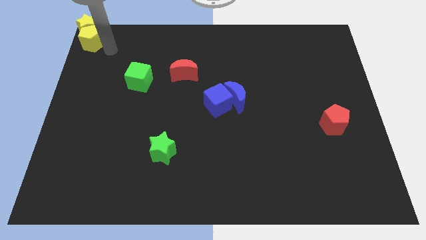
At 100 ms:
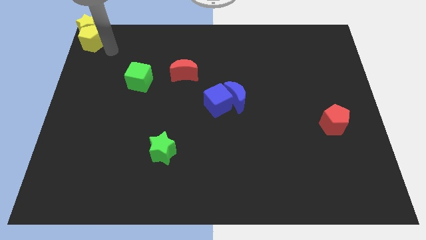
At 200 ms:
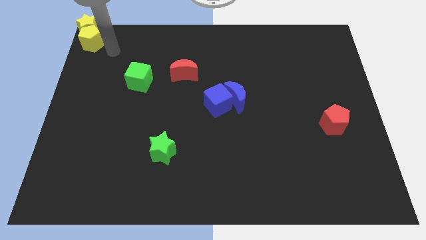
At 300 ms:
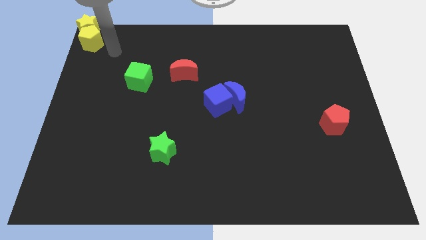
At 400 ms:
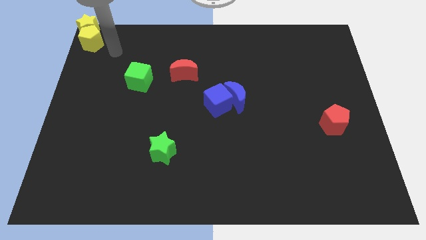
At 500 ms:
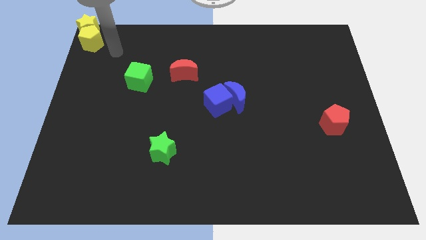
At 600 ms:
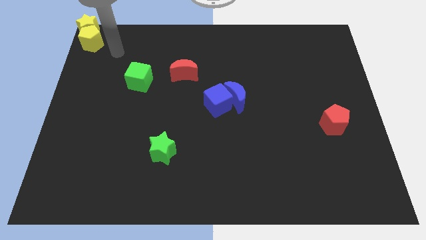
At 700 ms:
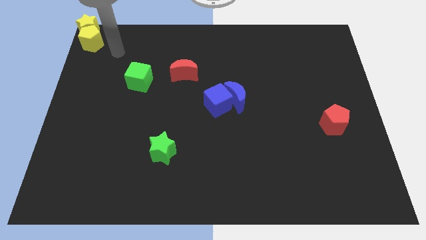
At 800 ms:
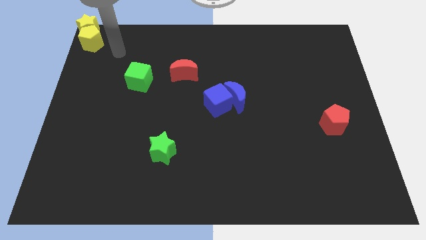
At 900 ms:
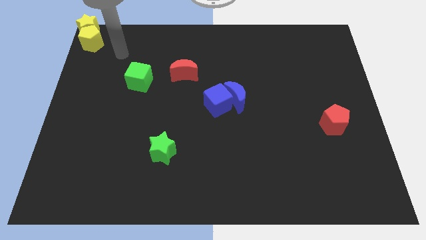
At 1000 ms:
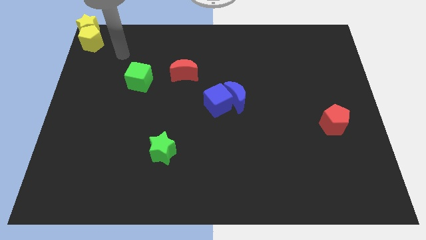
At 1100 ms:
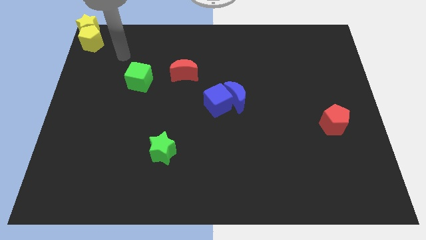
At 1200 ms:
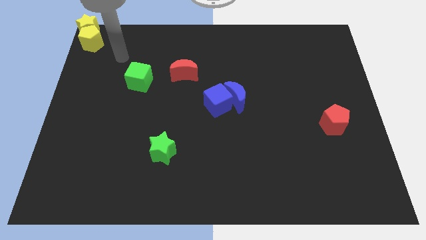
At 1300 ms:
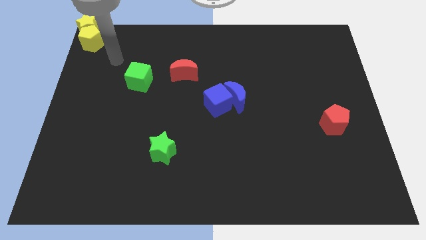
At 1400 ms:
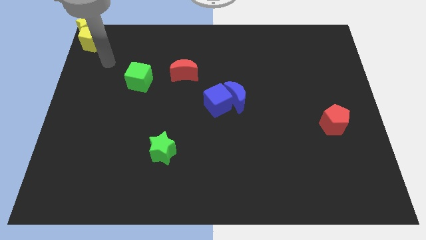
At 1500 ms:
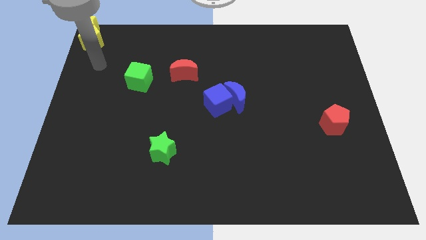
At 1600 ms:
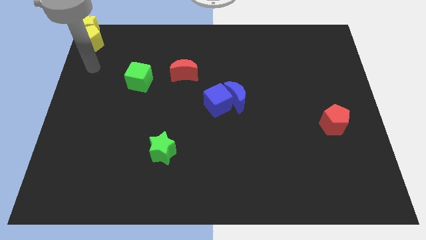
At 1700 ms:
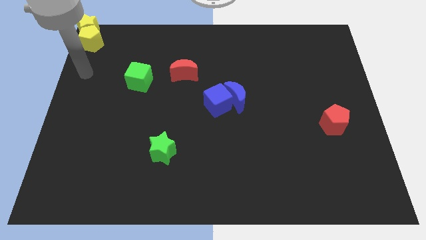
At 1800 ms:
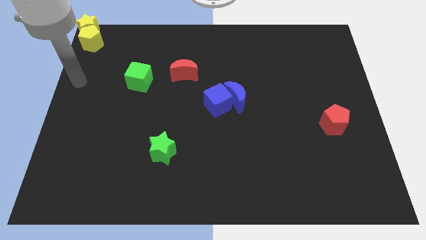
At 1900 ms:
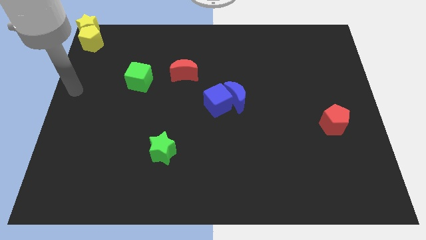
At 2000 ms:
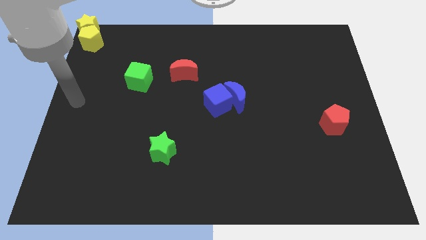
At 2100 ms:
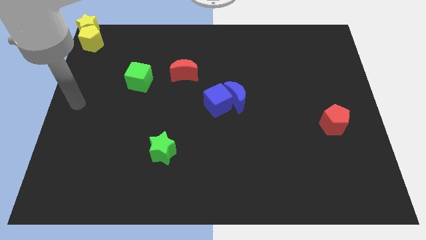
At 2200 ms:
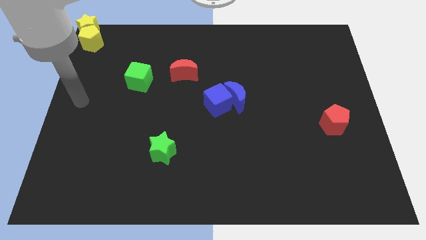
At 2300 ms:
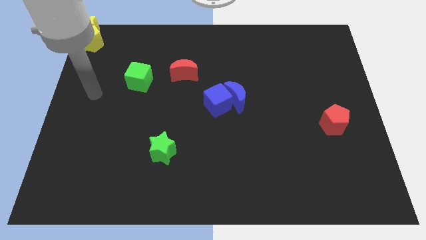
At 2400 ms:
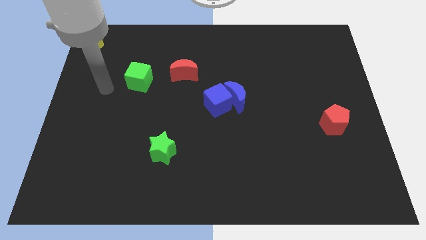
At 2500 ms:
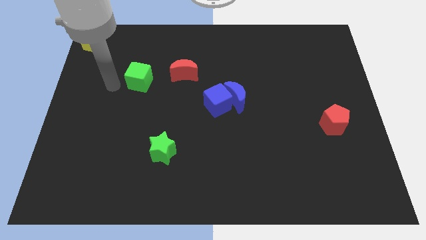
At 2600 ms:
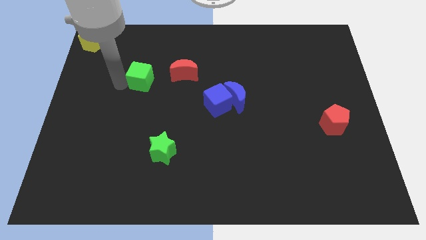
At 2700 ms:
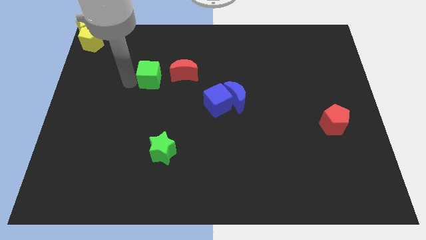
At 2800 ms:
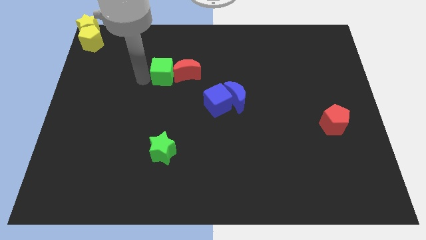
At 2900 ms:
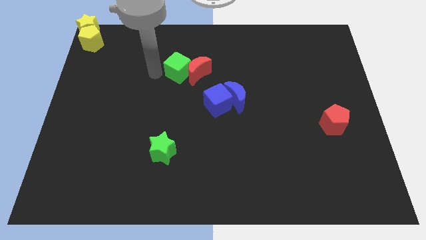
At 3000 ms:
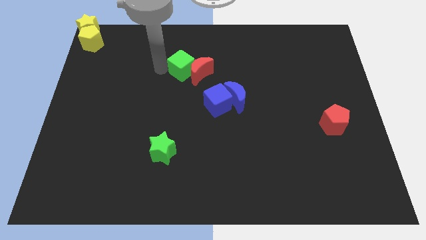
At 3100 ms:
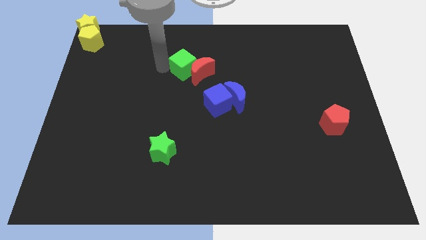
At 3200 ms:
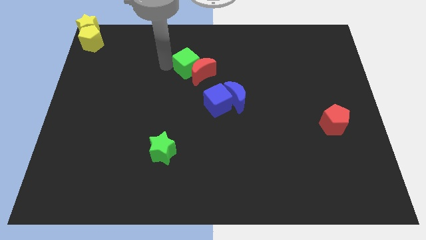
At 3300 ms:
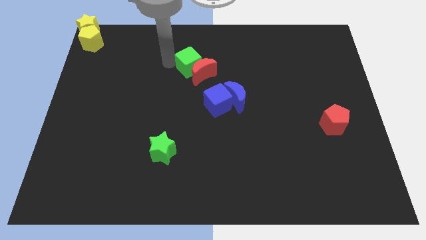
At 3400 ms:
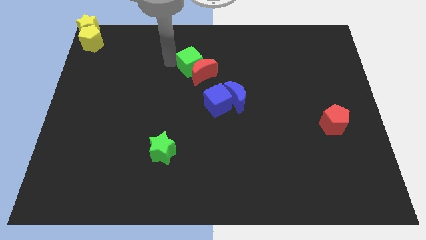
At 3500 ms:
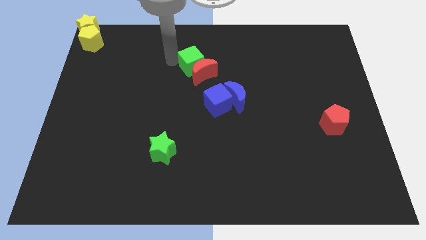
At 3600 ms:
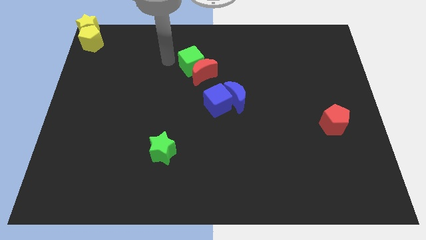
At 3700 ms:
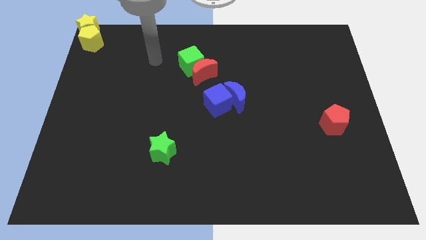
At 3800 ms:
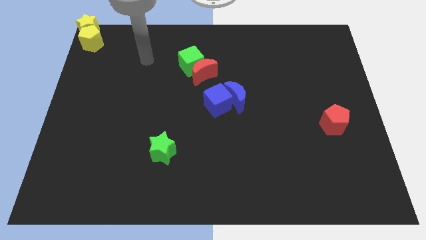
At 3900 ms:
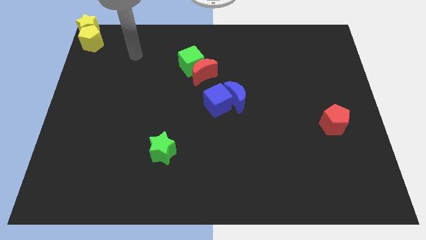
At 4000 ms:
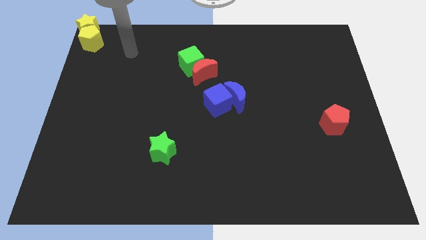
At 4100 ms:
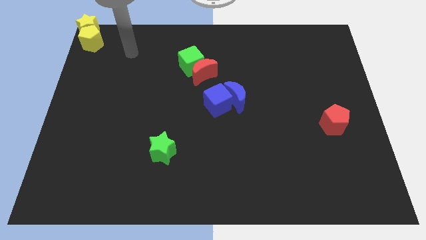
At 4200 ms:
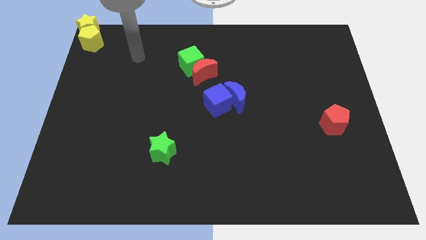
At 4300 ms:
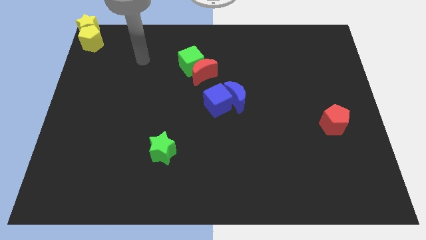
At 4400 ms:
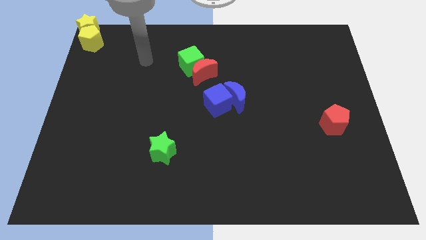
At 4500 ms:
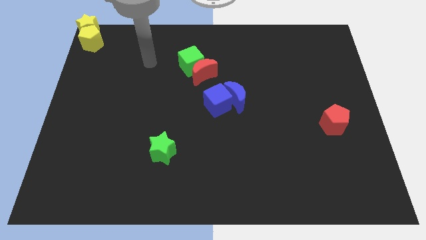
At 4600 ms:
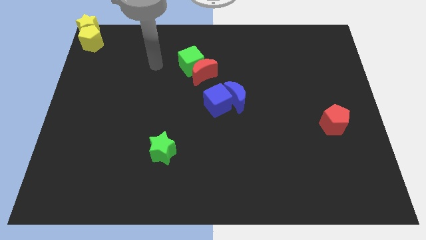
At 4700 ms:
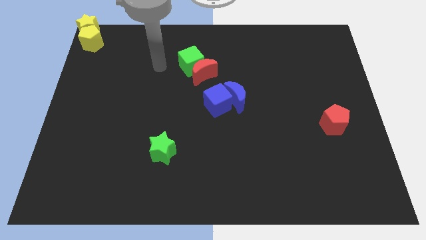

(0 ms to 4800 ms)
push green cube into the red moon

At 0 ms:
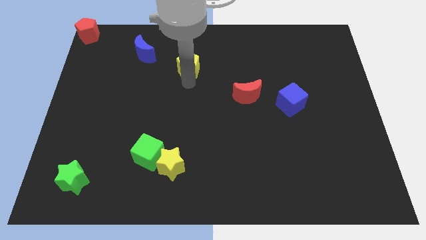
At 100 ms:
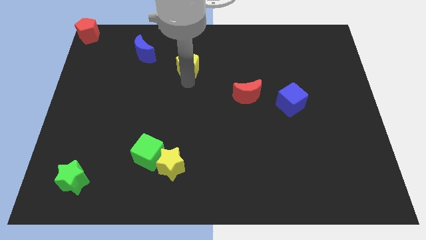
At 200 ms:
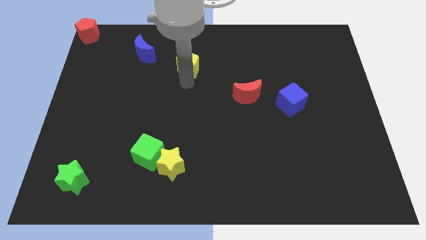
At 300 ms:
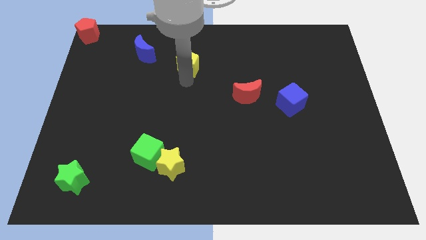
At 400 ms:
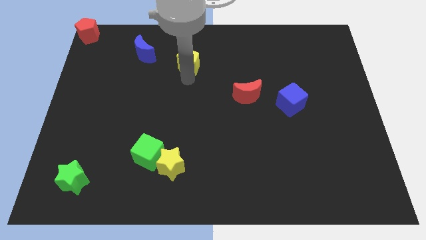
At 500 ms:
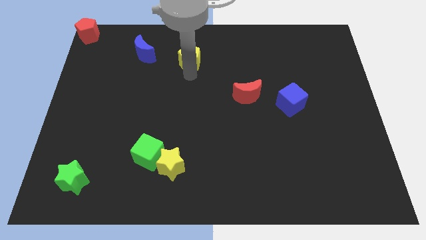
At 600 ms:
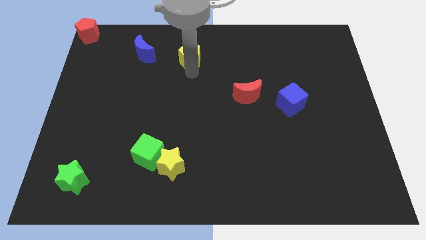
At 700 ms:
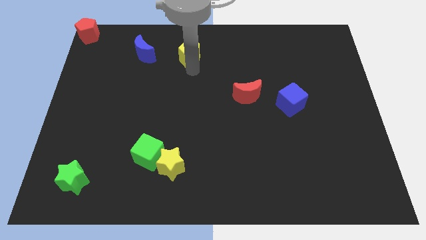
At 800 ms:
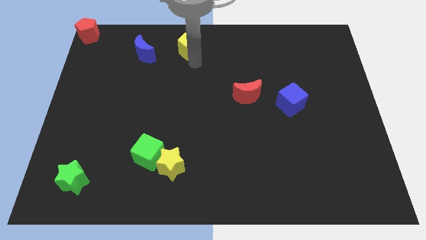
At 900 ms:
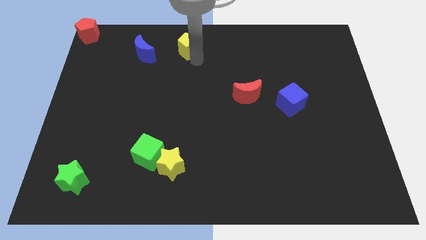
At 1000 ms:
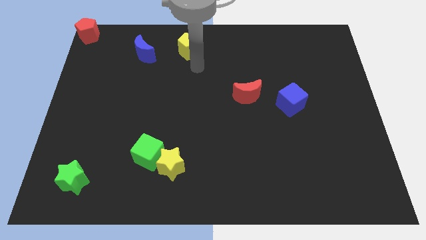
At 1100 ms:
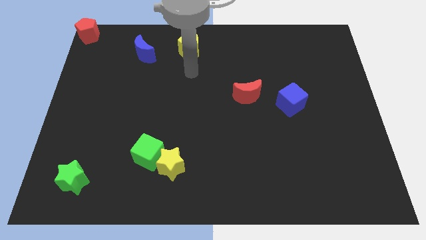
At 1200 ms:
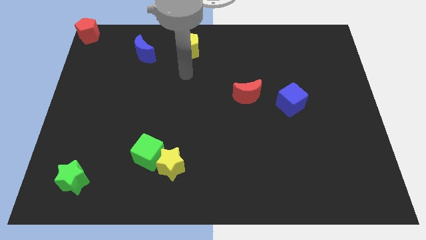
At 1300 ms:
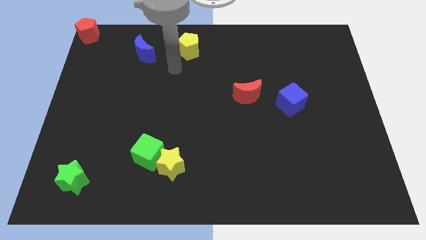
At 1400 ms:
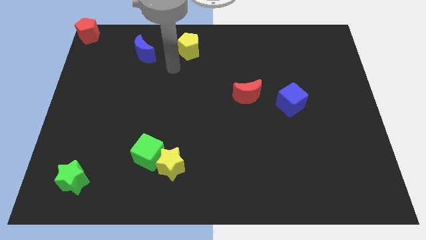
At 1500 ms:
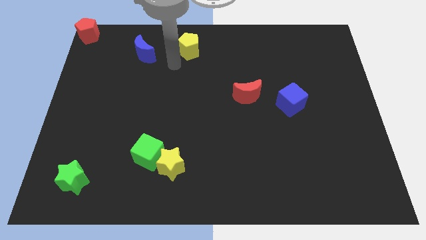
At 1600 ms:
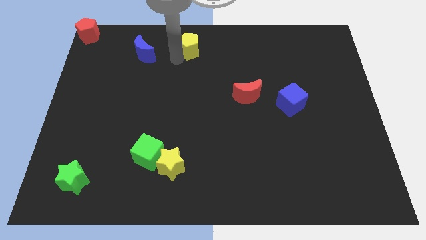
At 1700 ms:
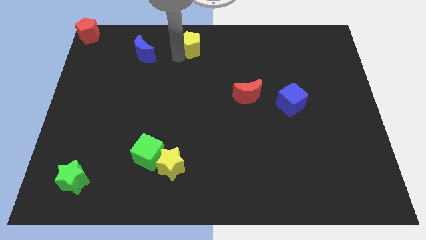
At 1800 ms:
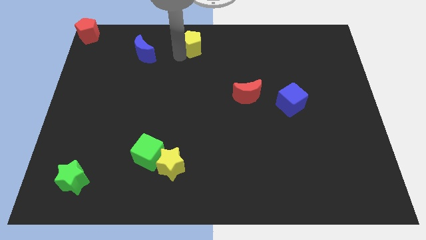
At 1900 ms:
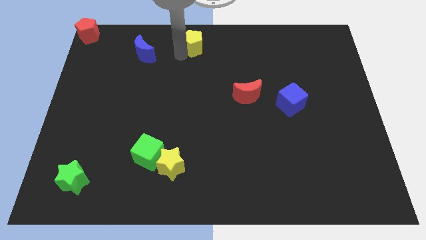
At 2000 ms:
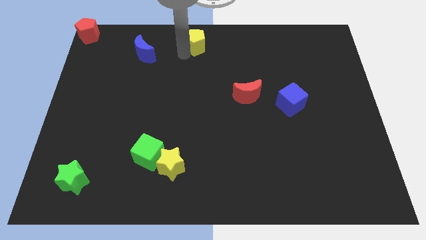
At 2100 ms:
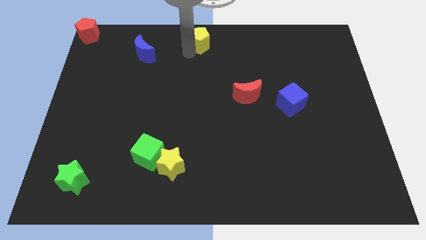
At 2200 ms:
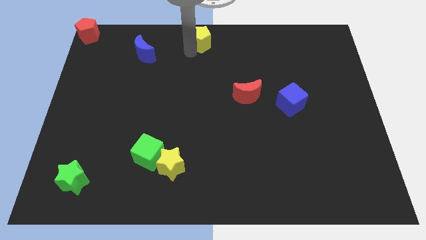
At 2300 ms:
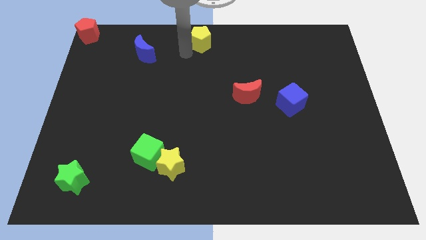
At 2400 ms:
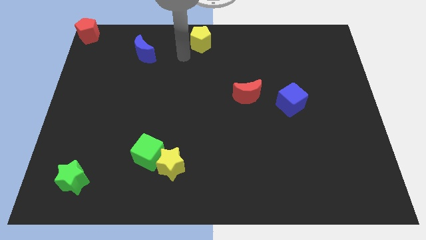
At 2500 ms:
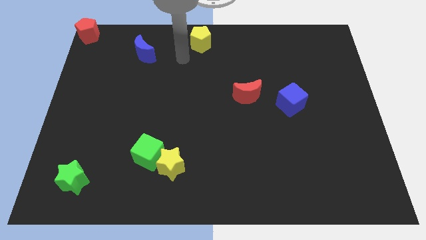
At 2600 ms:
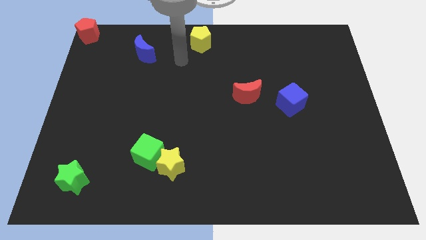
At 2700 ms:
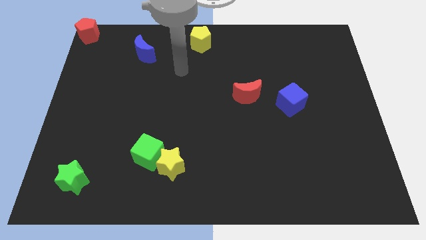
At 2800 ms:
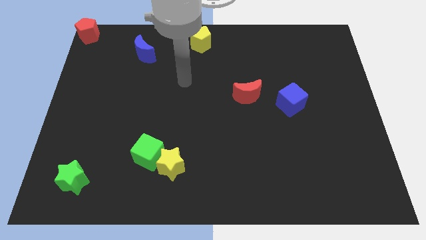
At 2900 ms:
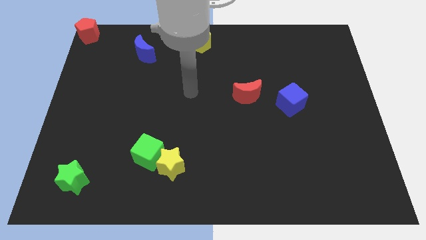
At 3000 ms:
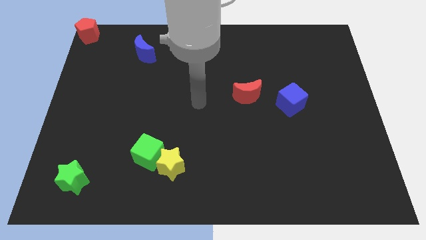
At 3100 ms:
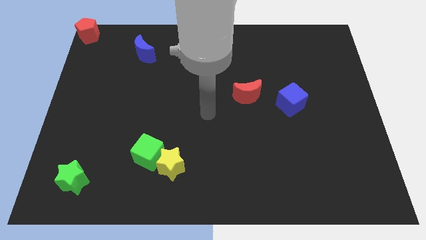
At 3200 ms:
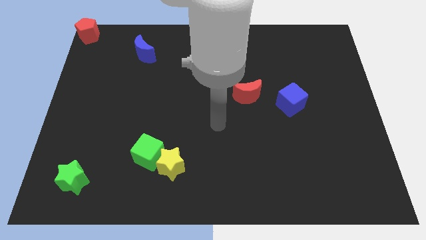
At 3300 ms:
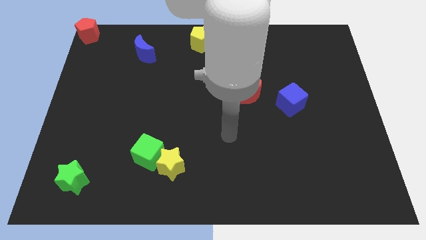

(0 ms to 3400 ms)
move the yellow pentagon diagonally top right to the blue moon

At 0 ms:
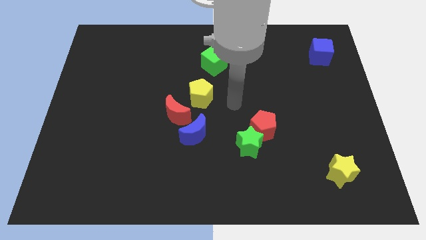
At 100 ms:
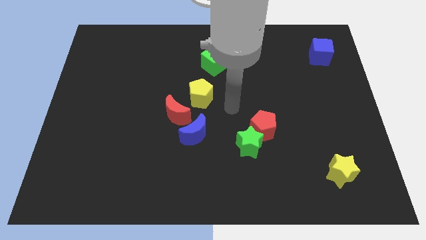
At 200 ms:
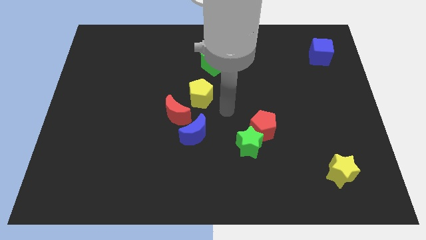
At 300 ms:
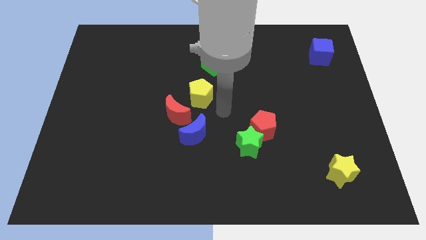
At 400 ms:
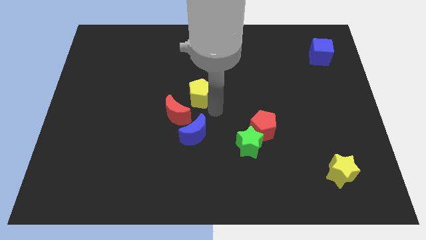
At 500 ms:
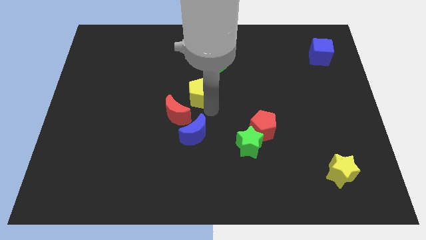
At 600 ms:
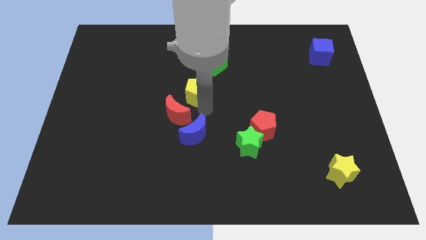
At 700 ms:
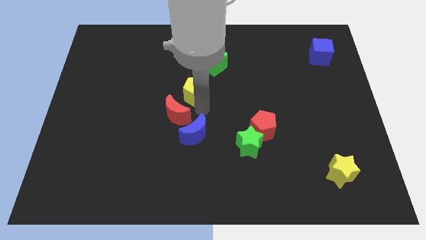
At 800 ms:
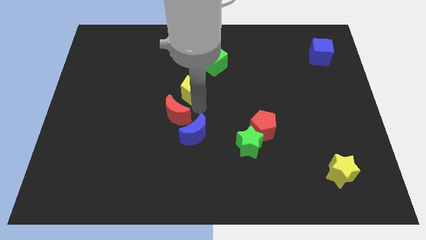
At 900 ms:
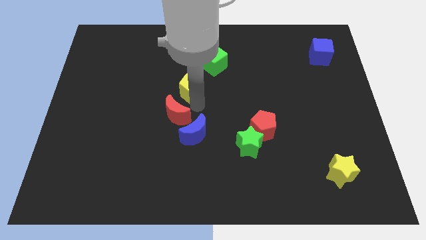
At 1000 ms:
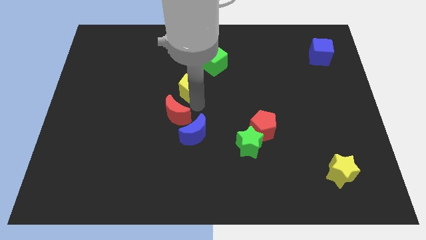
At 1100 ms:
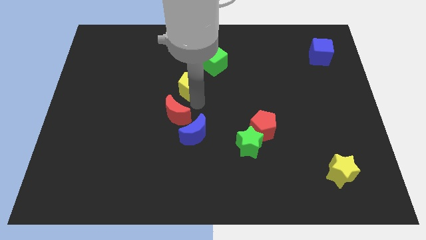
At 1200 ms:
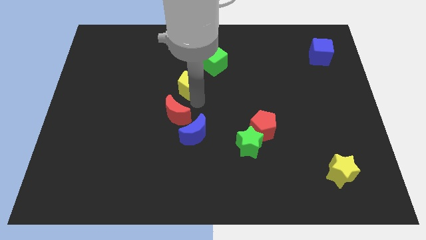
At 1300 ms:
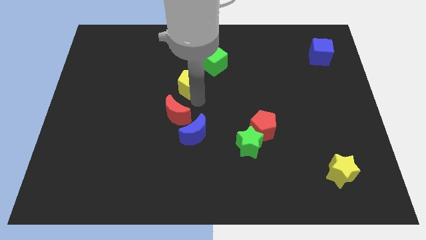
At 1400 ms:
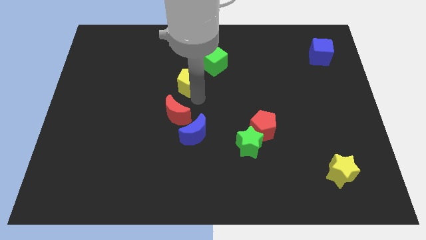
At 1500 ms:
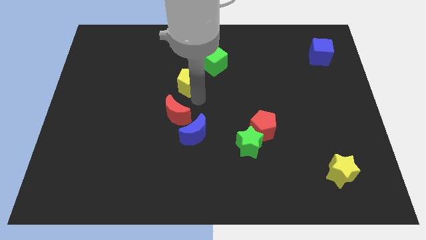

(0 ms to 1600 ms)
place yellow pentagon diagonally to green cube
